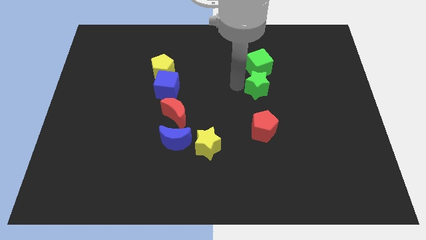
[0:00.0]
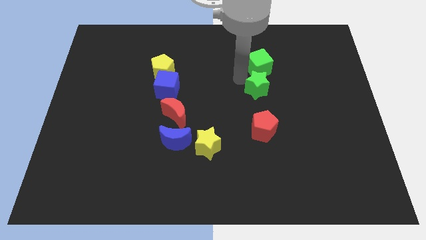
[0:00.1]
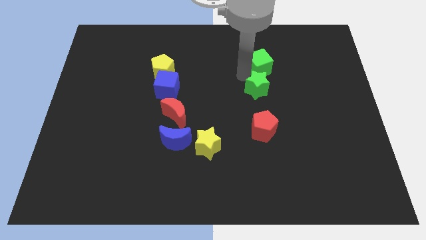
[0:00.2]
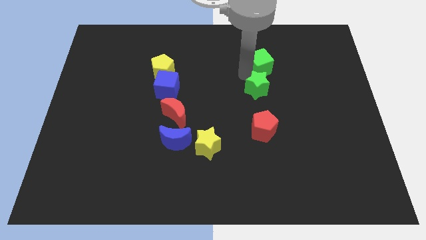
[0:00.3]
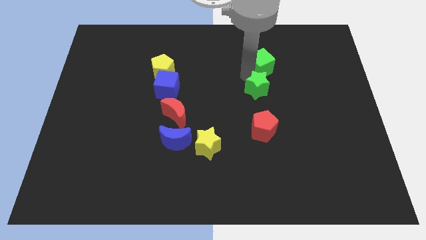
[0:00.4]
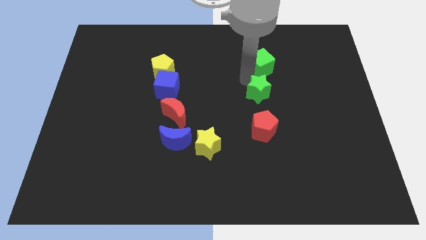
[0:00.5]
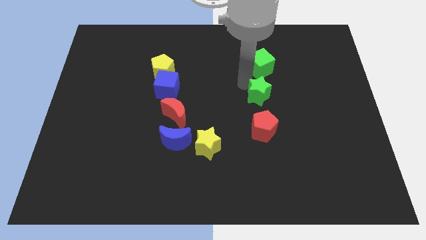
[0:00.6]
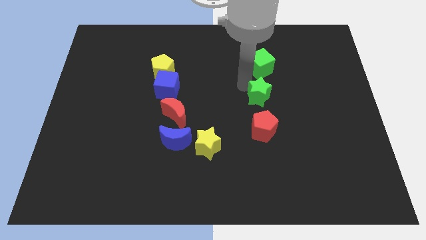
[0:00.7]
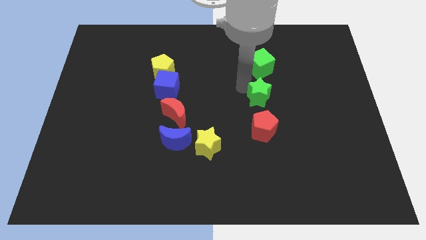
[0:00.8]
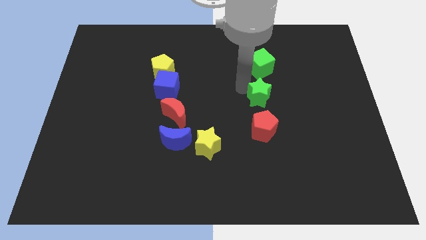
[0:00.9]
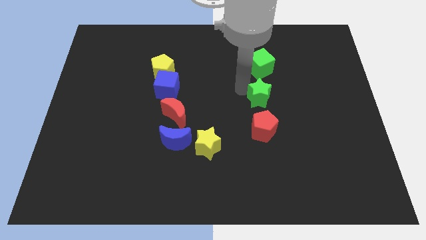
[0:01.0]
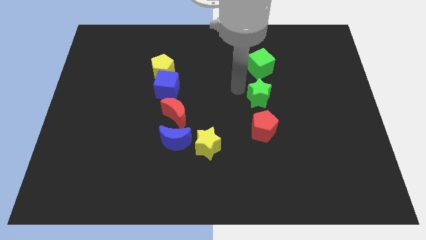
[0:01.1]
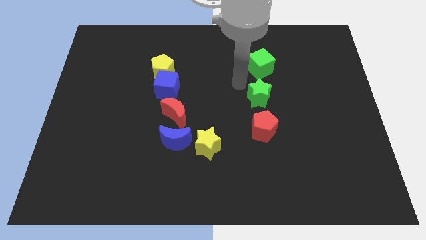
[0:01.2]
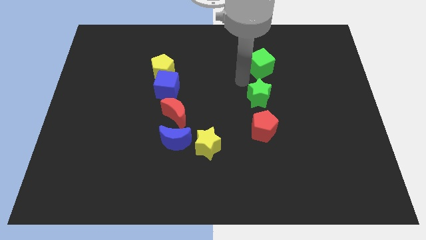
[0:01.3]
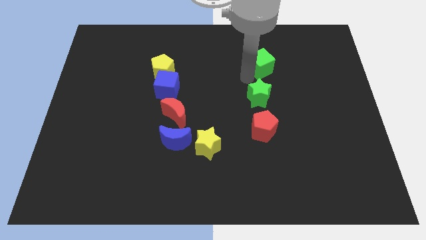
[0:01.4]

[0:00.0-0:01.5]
adjust the green star to the center of the green cube and red crescent

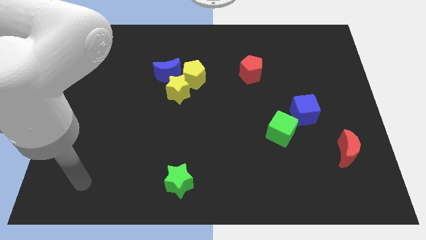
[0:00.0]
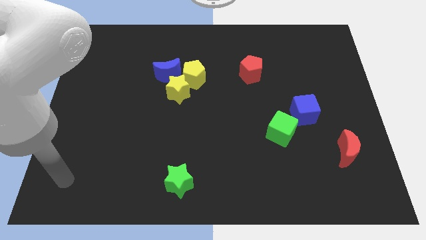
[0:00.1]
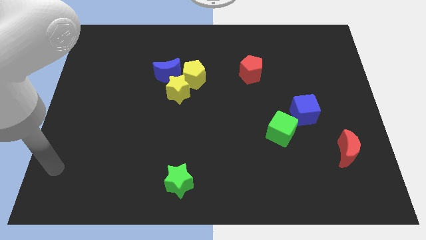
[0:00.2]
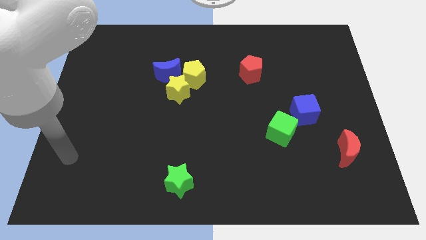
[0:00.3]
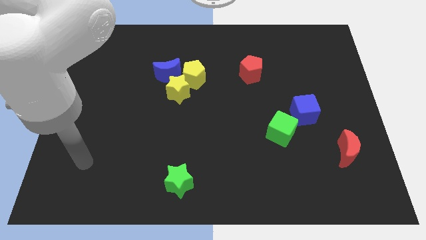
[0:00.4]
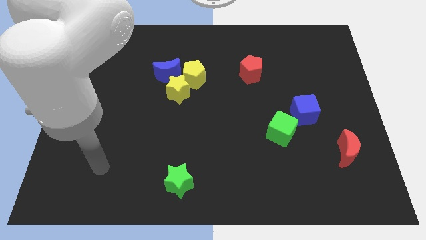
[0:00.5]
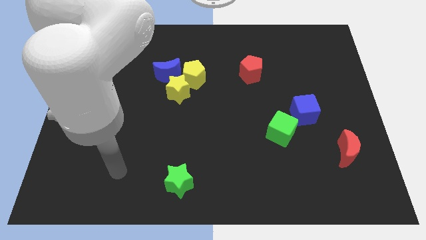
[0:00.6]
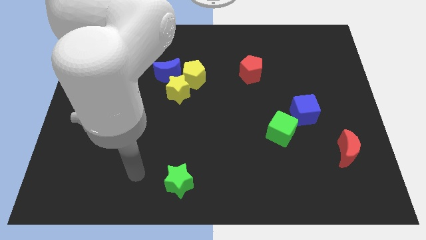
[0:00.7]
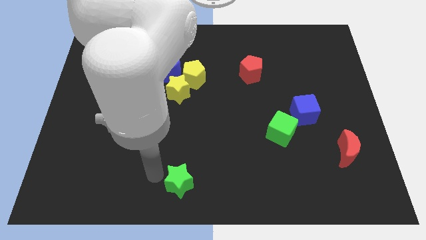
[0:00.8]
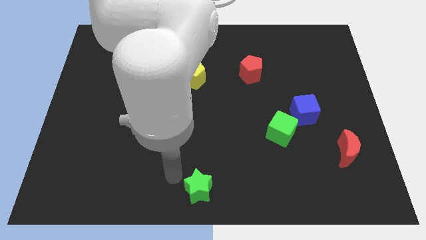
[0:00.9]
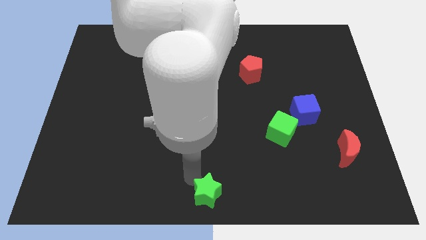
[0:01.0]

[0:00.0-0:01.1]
push the green star to the bottom center

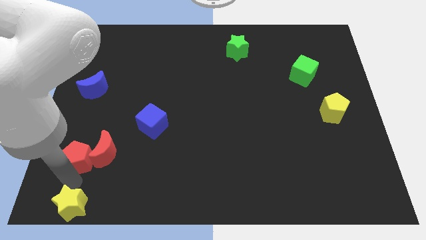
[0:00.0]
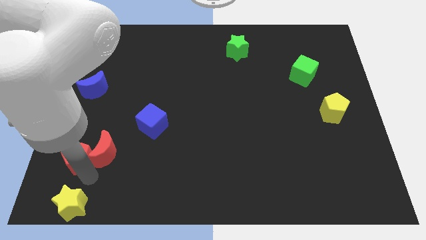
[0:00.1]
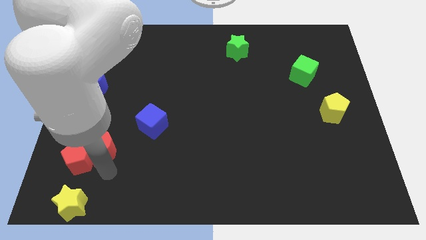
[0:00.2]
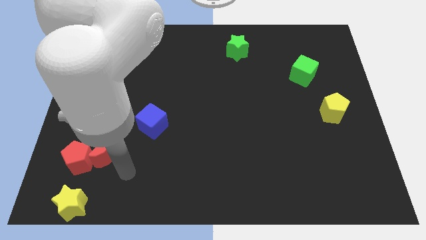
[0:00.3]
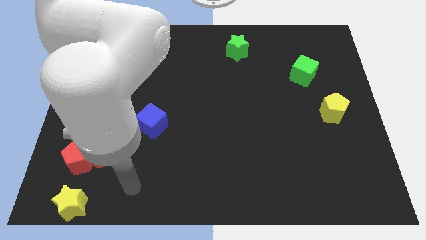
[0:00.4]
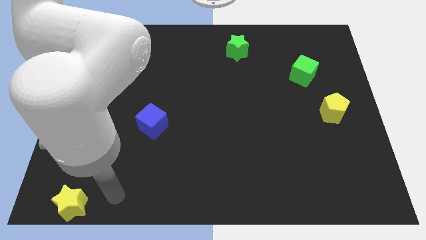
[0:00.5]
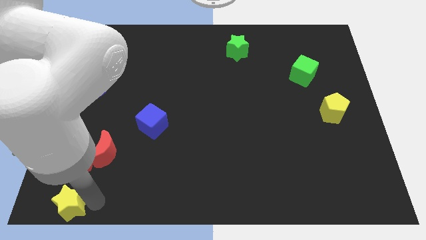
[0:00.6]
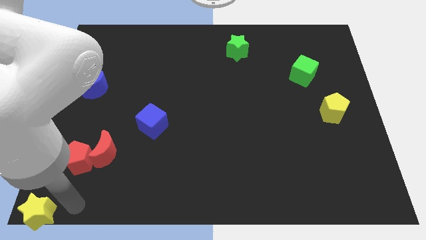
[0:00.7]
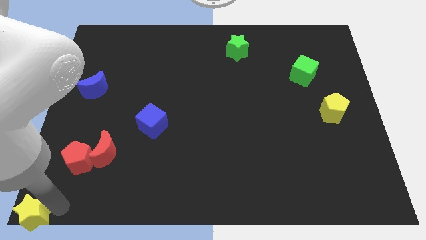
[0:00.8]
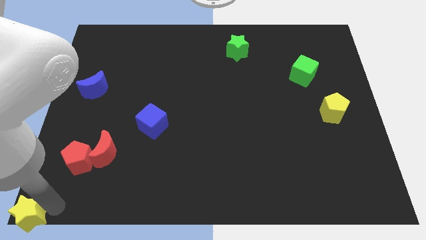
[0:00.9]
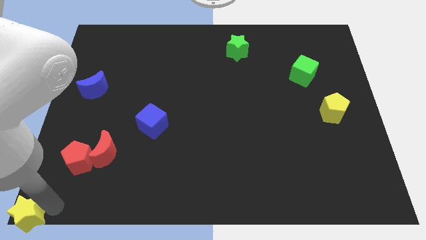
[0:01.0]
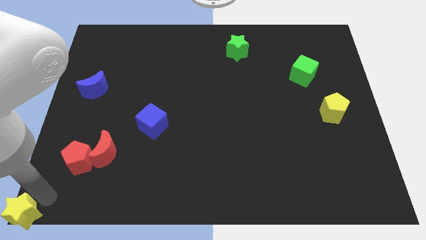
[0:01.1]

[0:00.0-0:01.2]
place the yellow star to the bottom left corner of the board

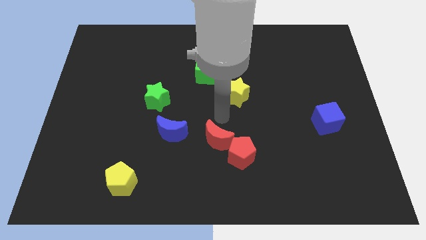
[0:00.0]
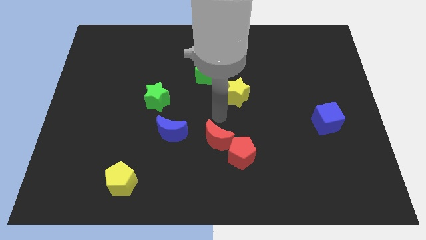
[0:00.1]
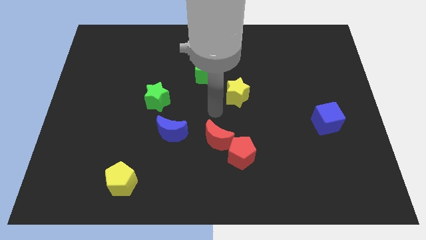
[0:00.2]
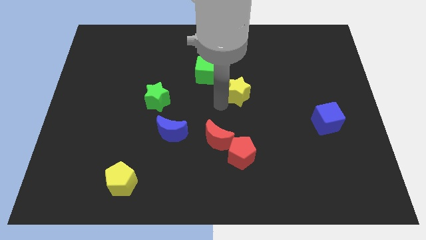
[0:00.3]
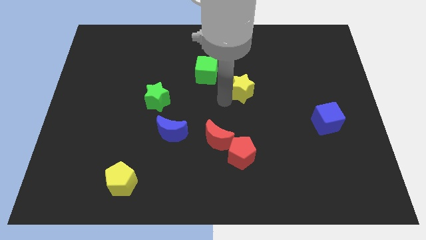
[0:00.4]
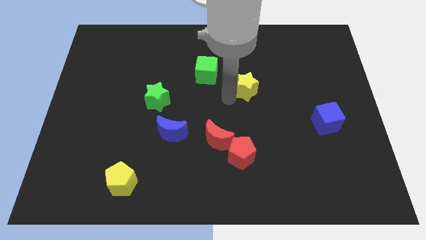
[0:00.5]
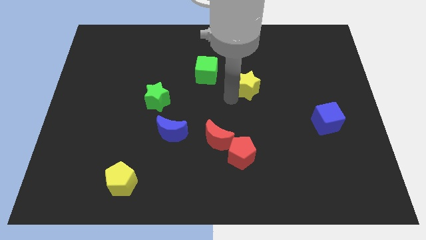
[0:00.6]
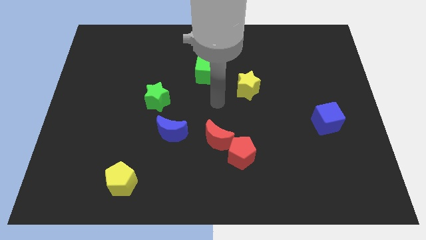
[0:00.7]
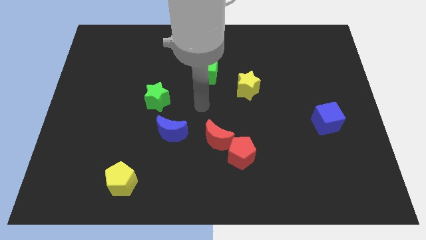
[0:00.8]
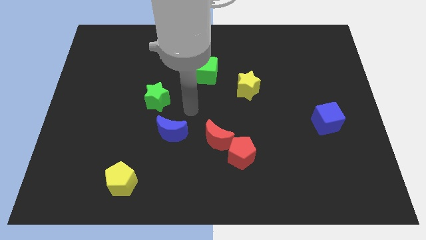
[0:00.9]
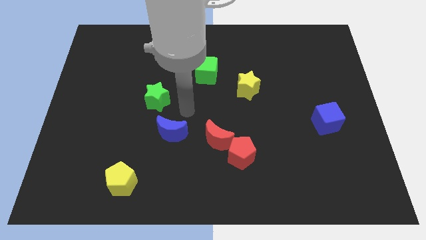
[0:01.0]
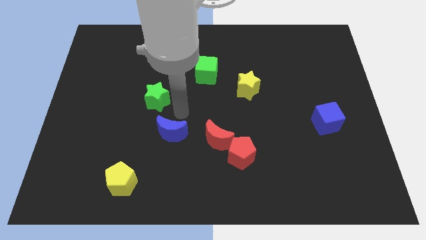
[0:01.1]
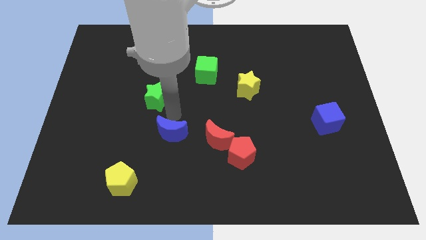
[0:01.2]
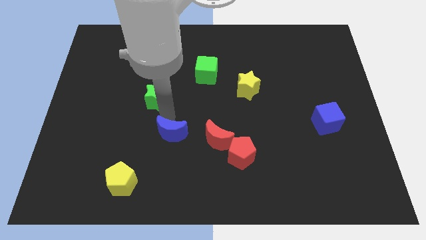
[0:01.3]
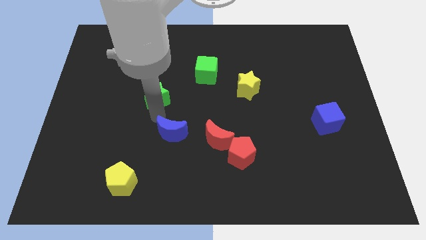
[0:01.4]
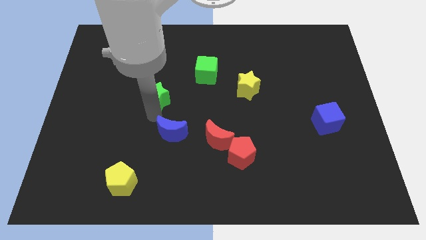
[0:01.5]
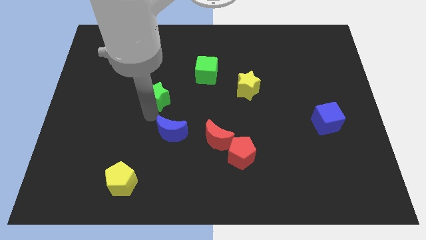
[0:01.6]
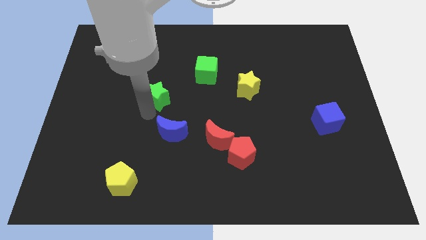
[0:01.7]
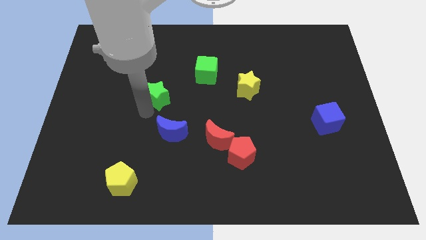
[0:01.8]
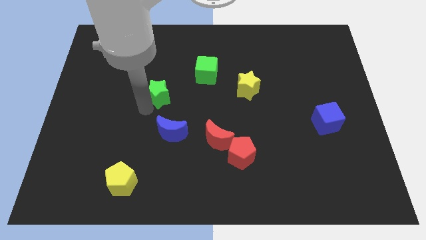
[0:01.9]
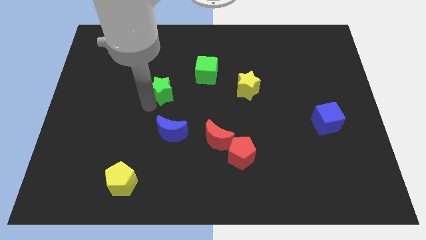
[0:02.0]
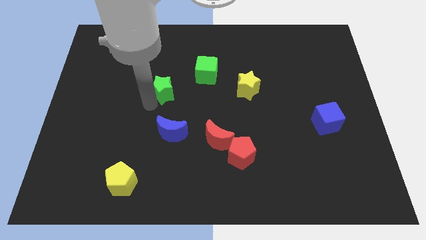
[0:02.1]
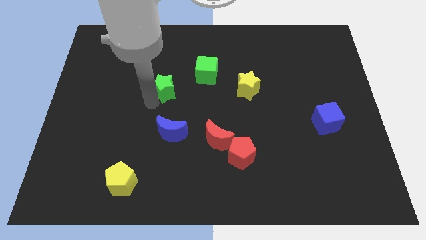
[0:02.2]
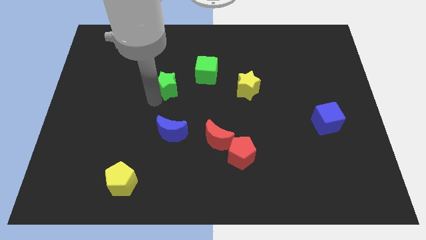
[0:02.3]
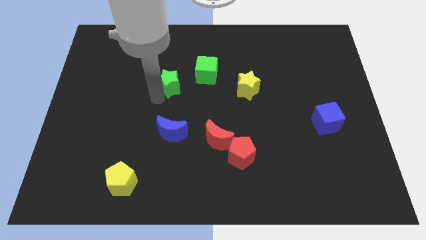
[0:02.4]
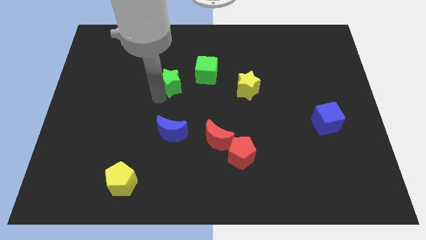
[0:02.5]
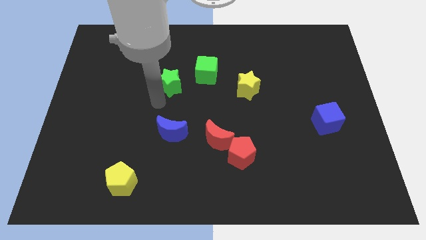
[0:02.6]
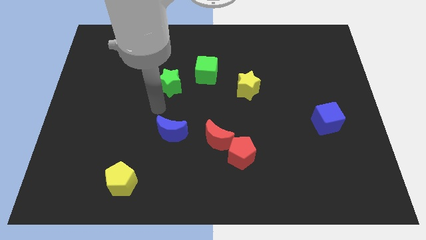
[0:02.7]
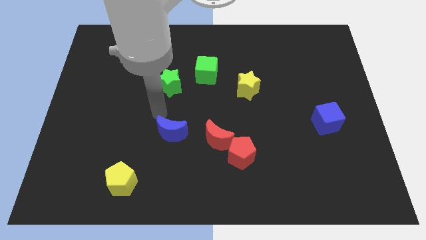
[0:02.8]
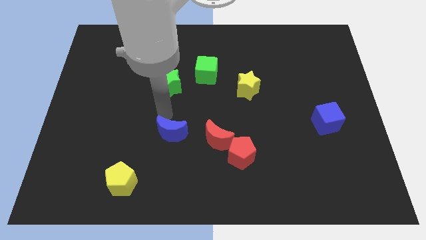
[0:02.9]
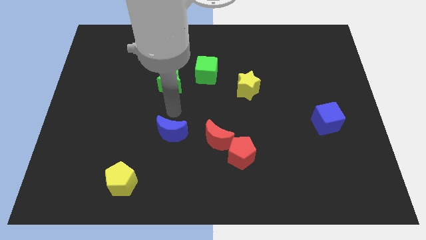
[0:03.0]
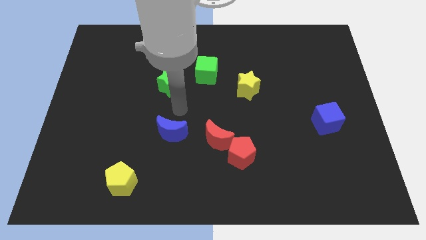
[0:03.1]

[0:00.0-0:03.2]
push the green and yellow stars towards the top side of the board

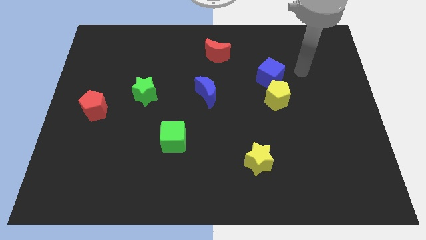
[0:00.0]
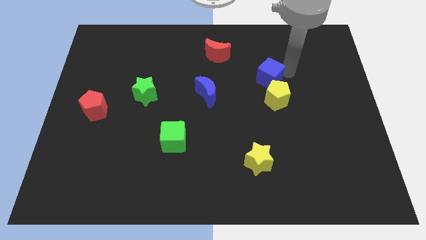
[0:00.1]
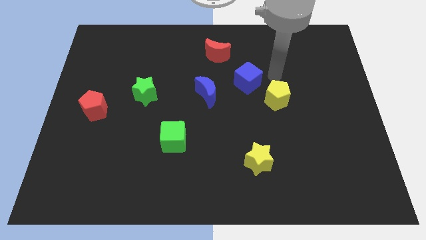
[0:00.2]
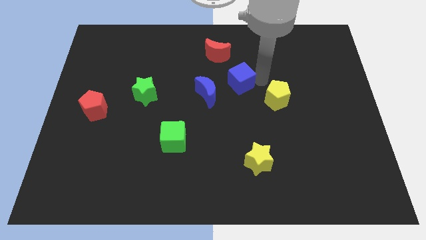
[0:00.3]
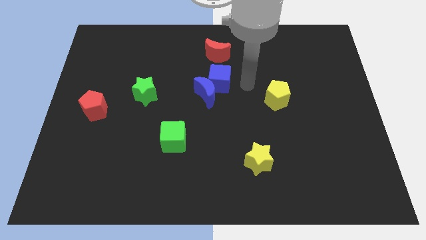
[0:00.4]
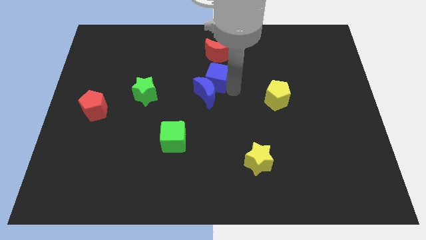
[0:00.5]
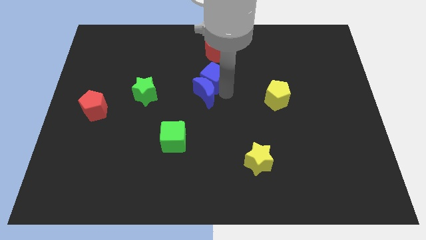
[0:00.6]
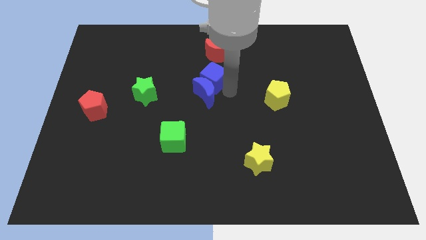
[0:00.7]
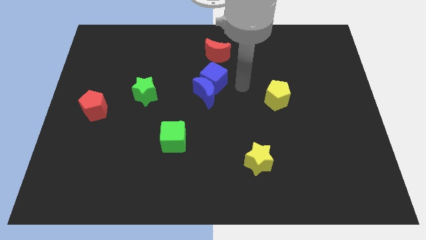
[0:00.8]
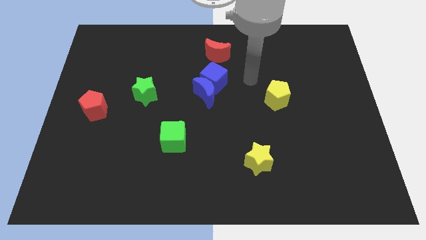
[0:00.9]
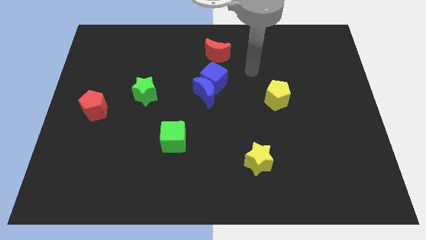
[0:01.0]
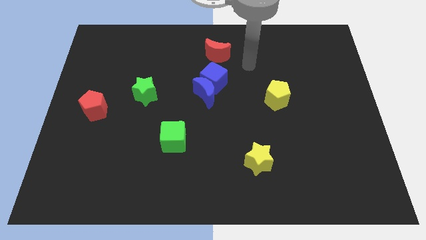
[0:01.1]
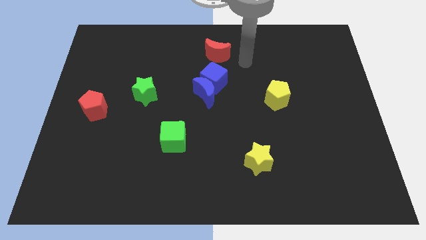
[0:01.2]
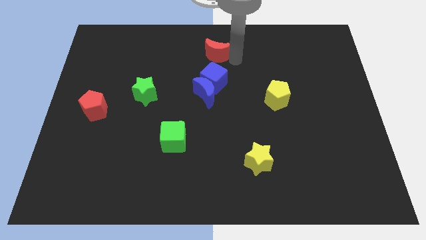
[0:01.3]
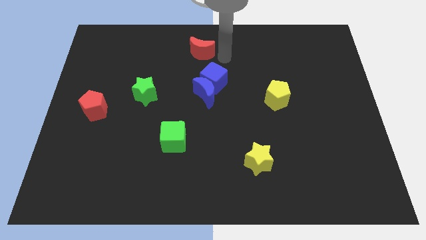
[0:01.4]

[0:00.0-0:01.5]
attach the blue cube to the blue moon

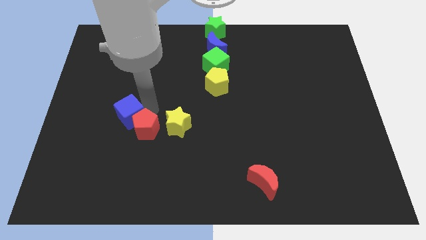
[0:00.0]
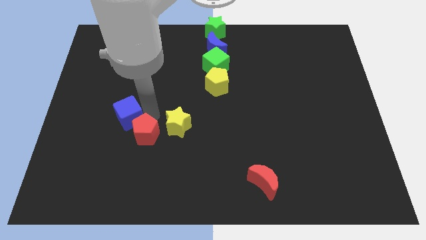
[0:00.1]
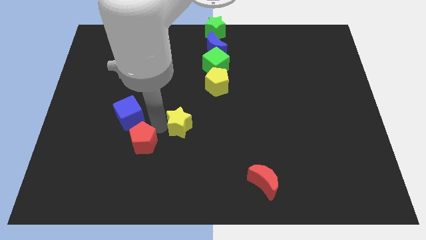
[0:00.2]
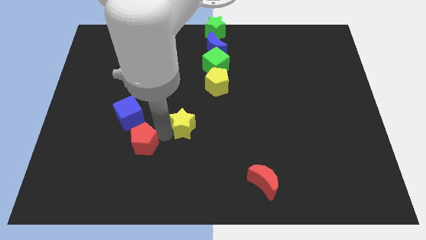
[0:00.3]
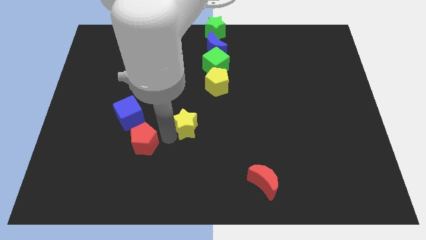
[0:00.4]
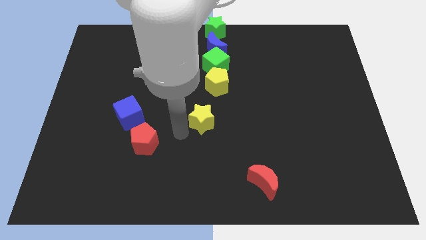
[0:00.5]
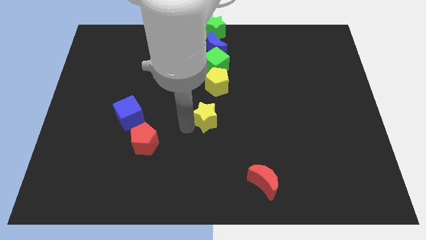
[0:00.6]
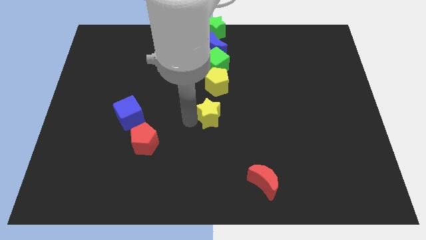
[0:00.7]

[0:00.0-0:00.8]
put the yellow star vertically below the yellow pentagon
